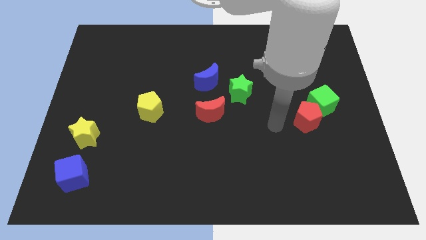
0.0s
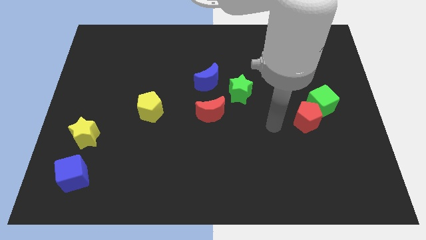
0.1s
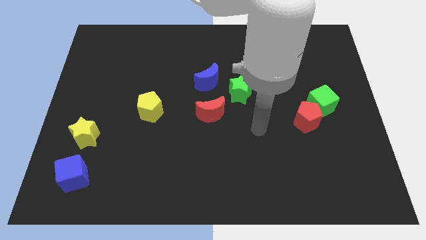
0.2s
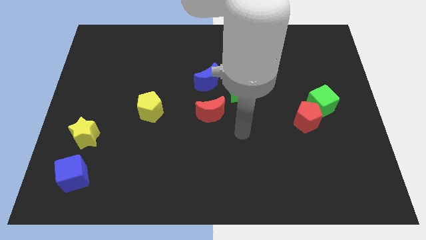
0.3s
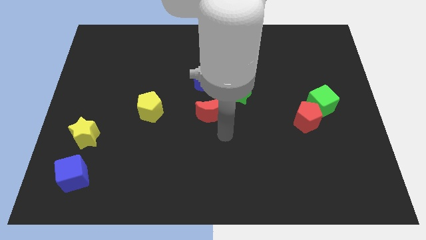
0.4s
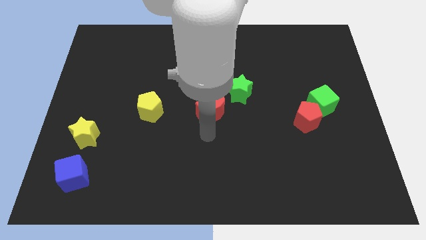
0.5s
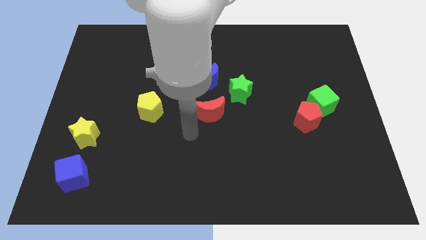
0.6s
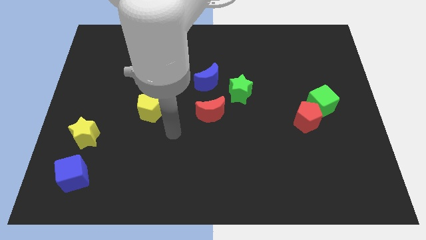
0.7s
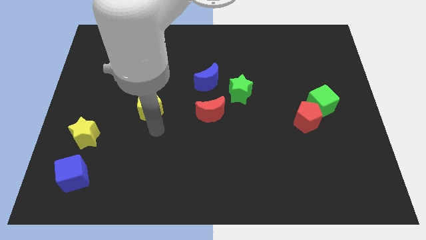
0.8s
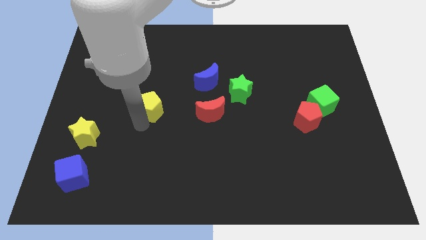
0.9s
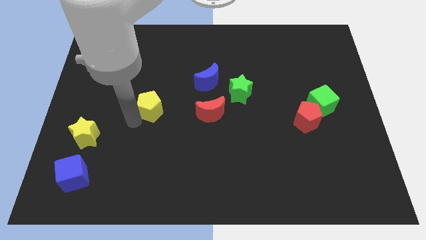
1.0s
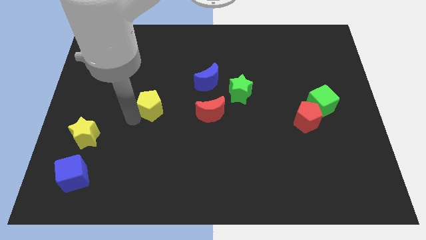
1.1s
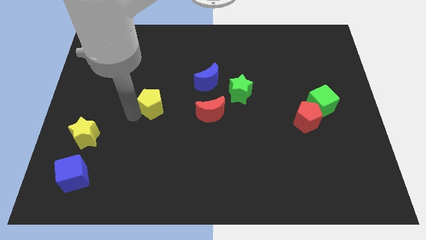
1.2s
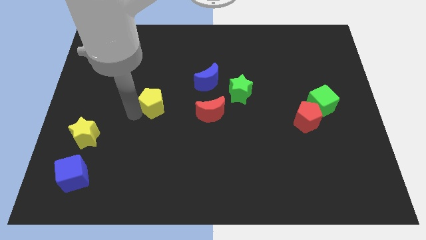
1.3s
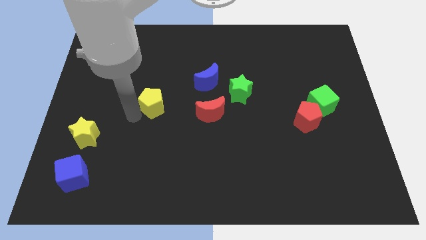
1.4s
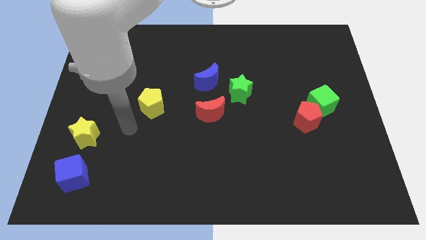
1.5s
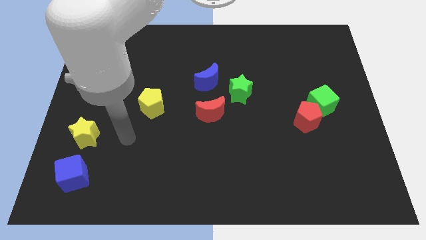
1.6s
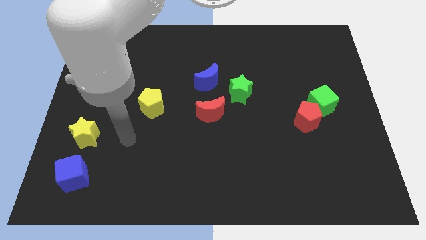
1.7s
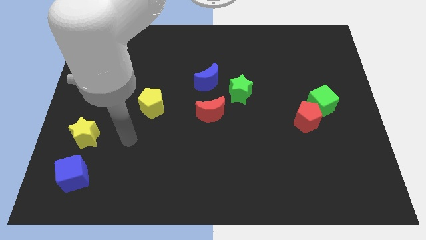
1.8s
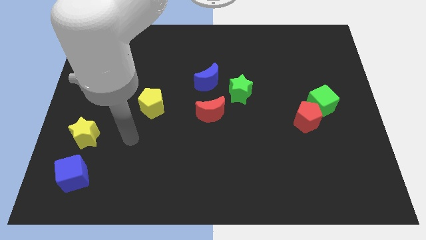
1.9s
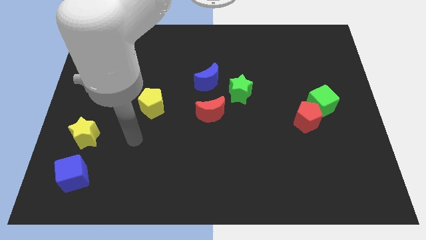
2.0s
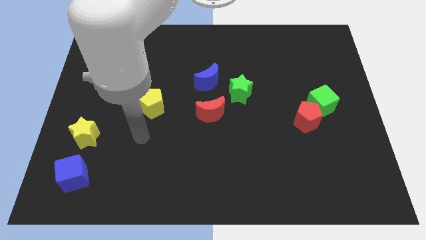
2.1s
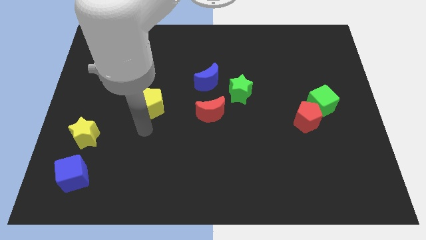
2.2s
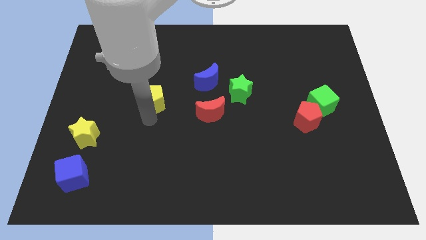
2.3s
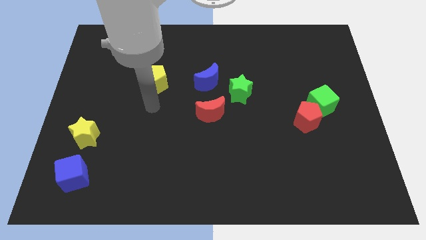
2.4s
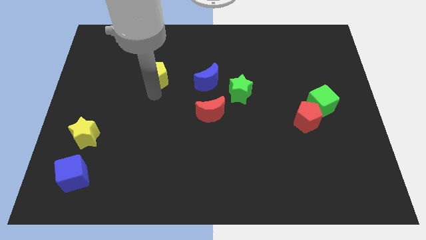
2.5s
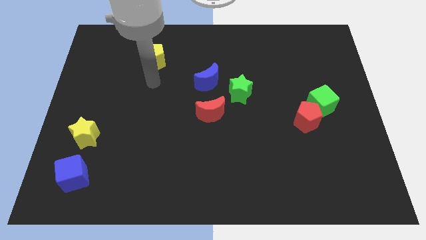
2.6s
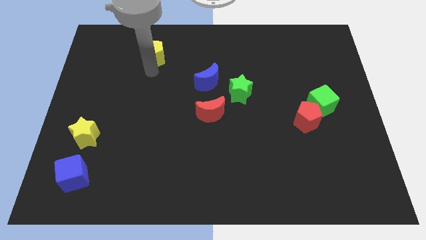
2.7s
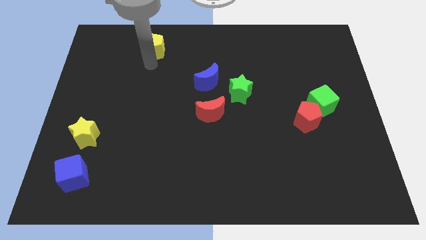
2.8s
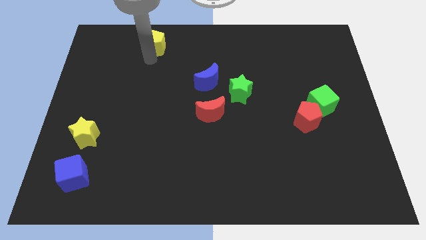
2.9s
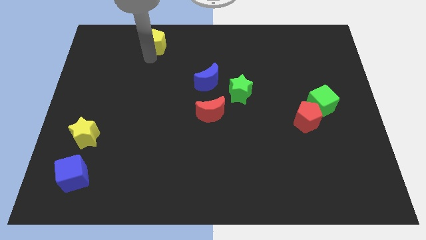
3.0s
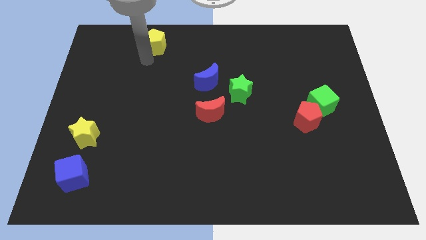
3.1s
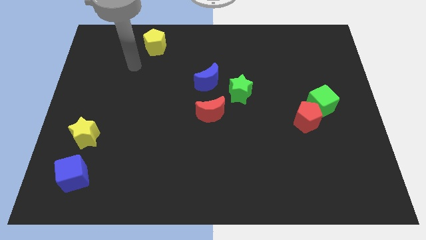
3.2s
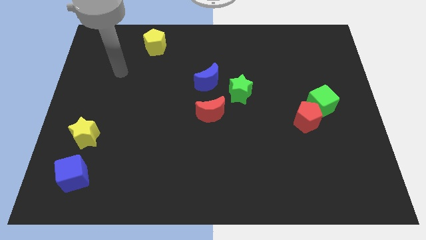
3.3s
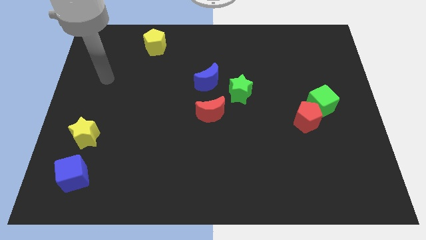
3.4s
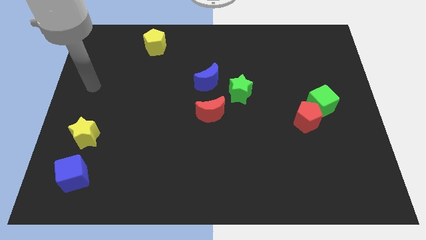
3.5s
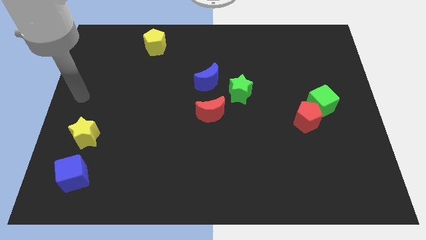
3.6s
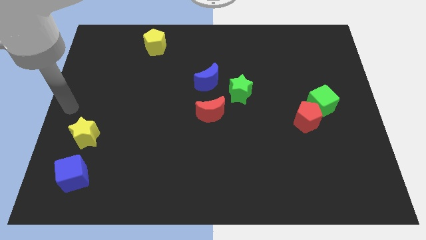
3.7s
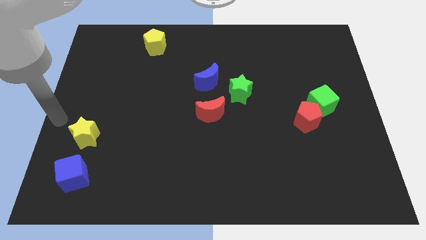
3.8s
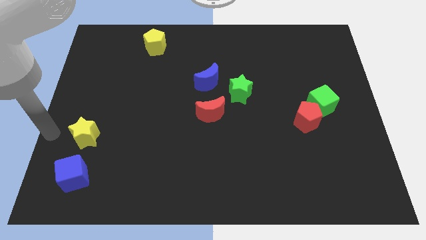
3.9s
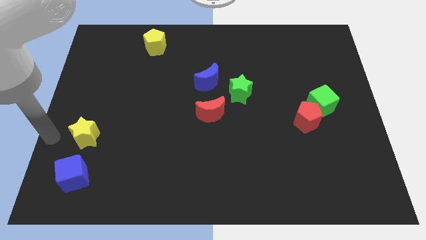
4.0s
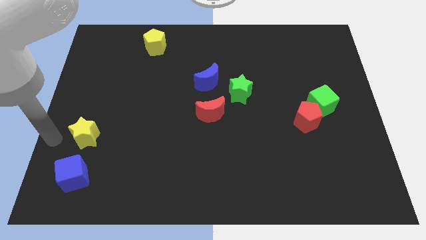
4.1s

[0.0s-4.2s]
move the yellow pentagon to the top of the board

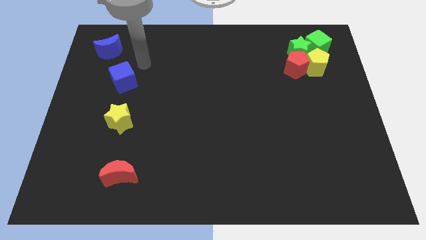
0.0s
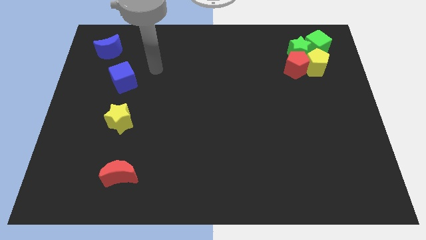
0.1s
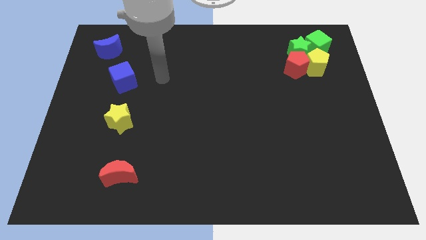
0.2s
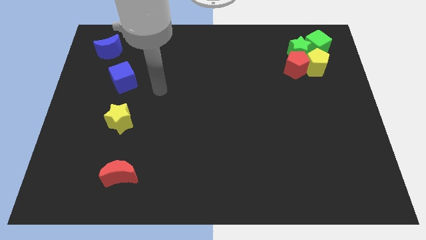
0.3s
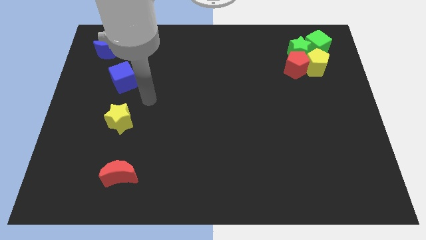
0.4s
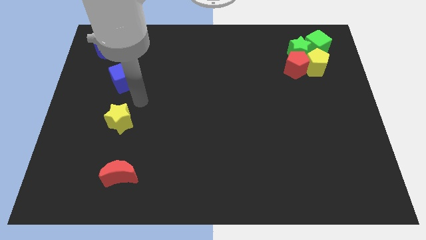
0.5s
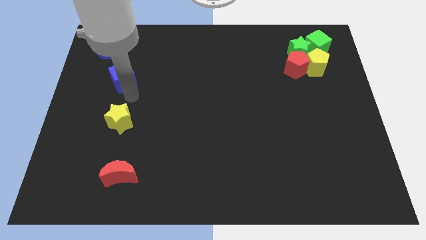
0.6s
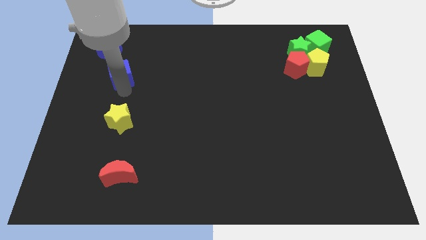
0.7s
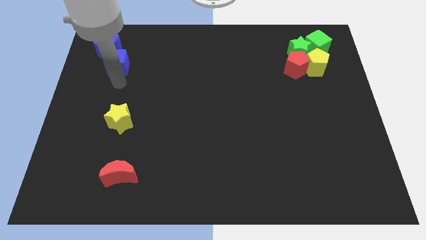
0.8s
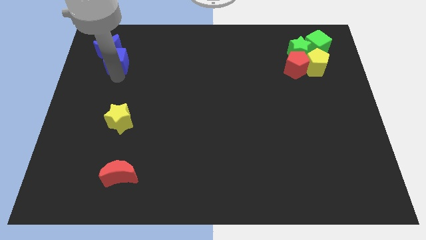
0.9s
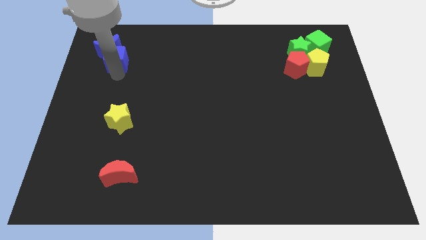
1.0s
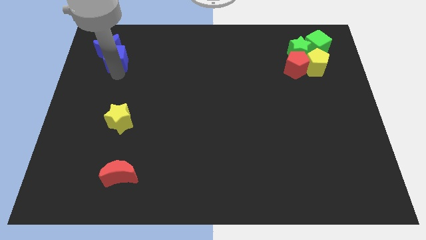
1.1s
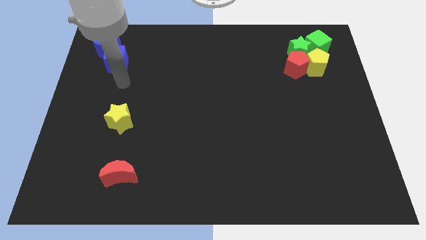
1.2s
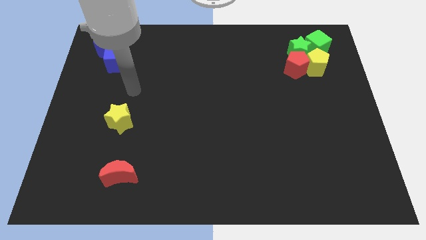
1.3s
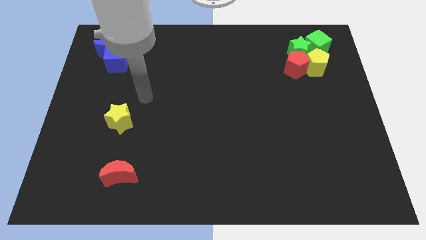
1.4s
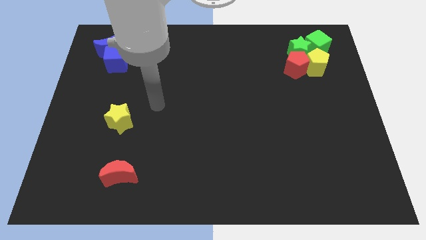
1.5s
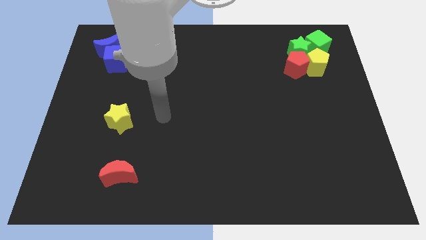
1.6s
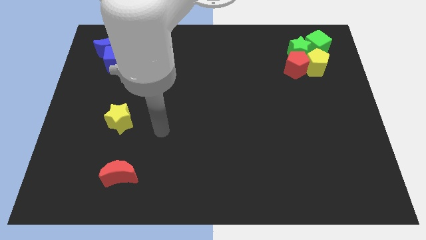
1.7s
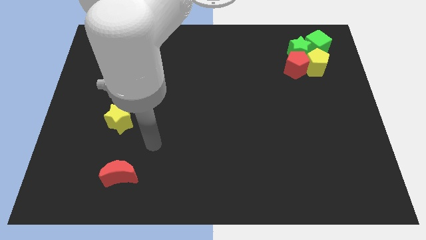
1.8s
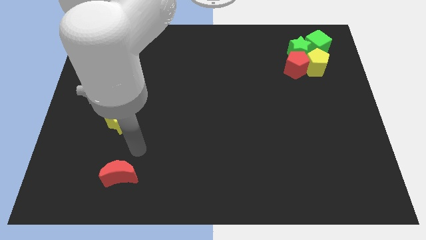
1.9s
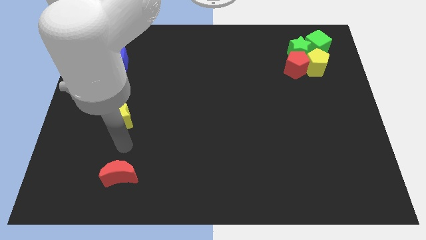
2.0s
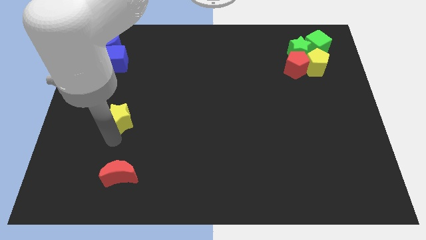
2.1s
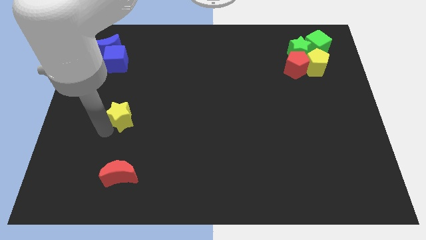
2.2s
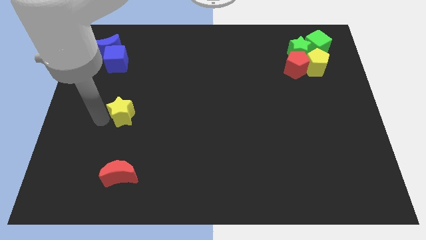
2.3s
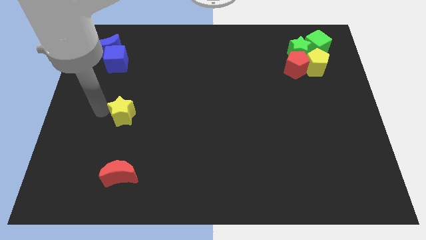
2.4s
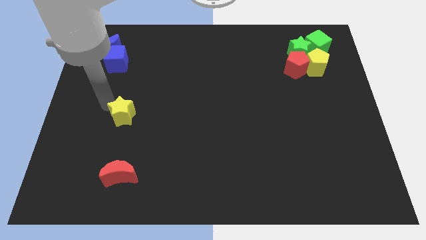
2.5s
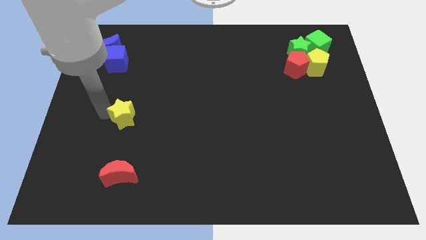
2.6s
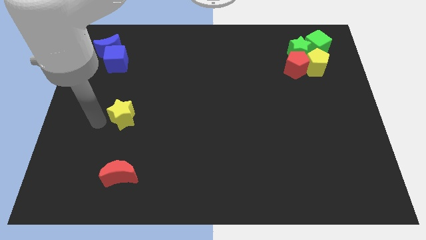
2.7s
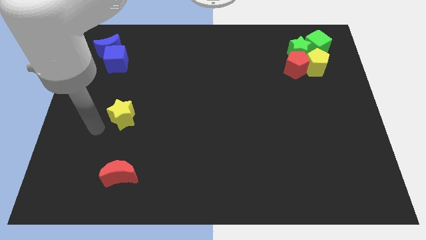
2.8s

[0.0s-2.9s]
move the blue cube below the blue moon

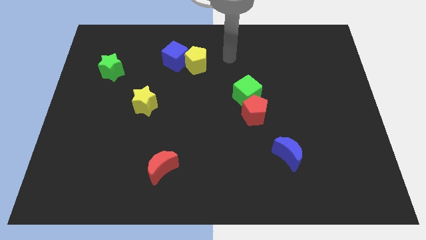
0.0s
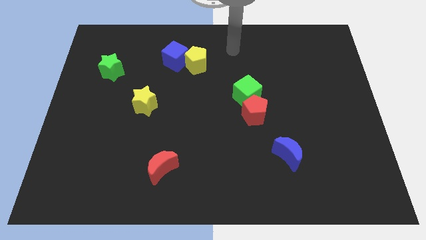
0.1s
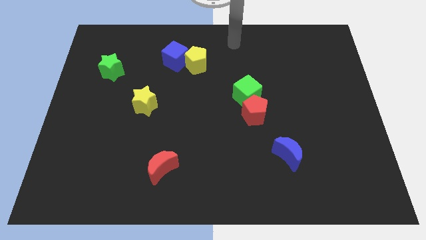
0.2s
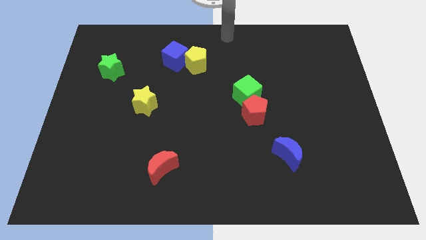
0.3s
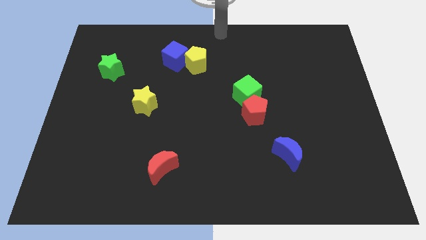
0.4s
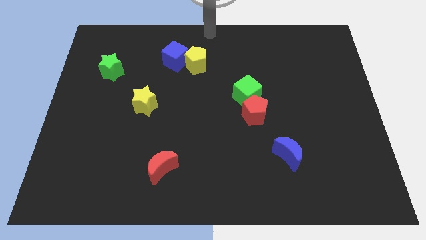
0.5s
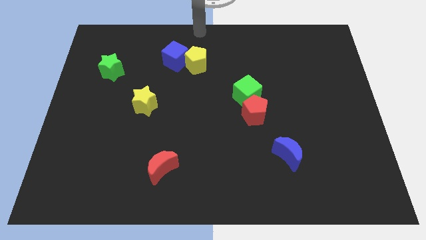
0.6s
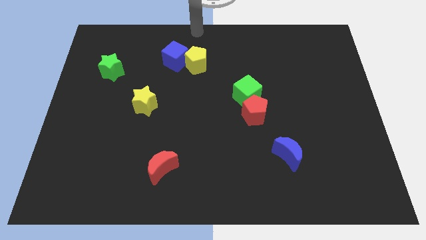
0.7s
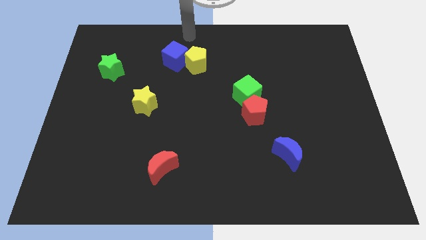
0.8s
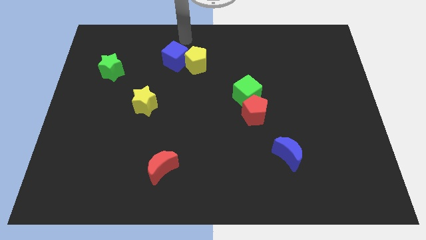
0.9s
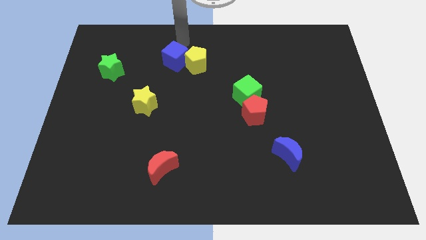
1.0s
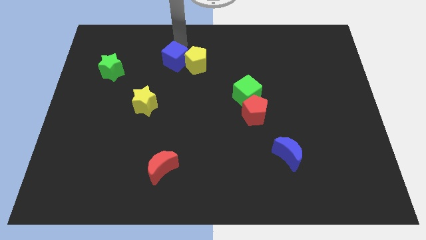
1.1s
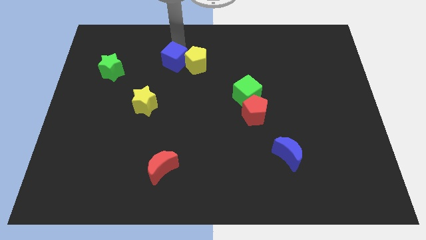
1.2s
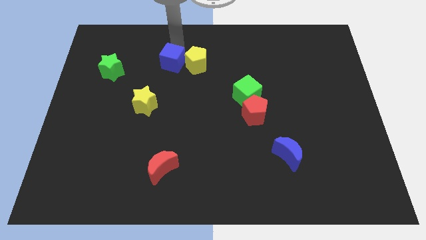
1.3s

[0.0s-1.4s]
touch the top of the blue cube

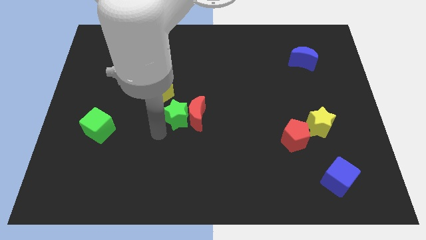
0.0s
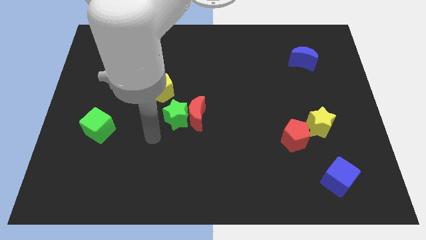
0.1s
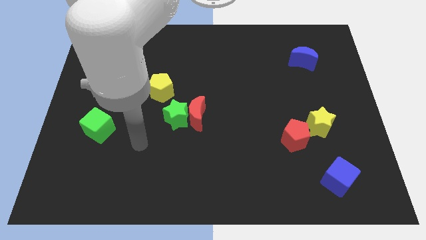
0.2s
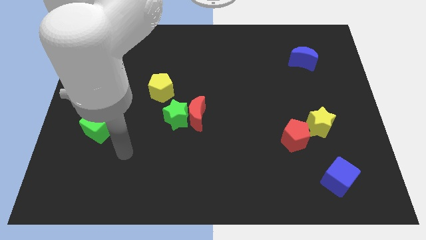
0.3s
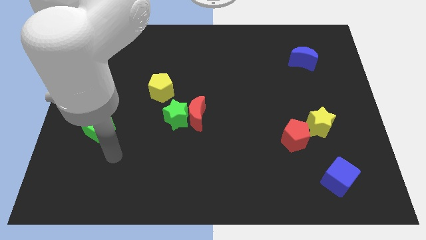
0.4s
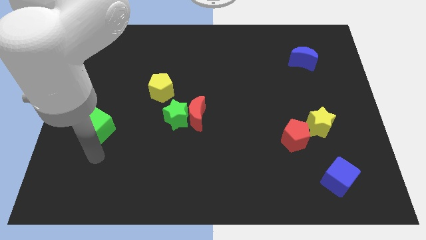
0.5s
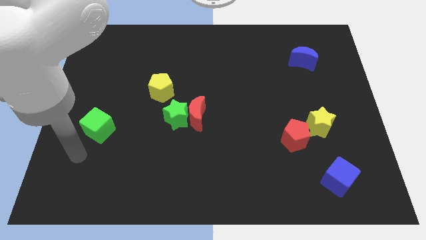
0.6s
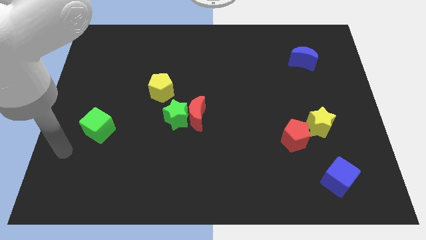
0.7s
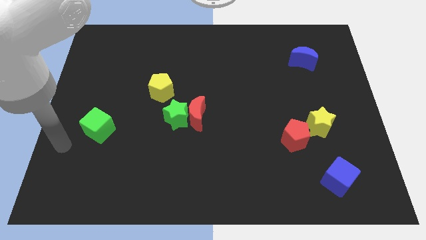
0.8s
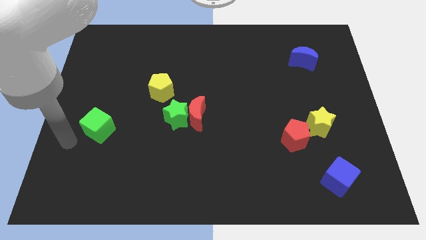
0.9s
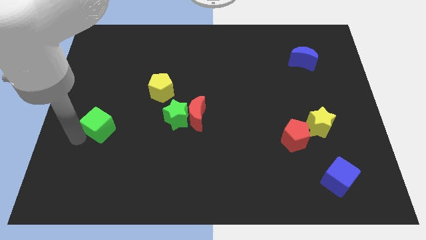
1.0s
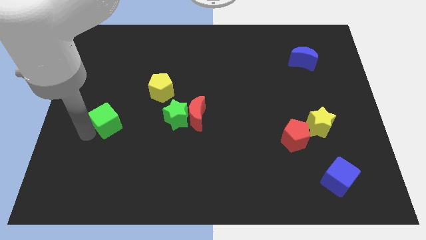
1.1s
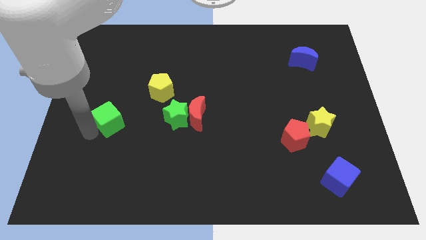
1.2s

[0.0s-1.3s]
push the green cube slightly to the right
